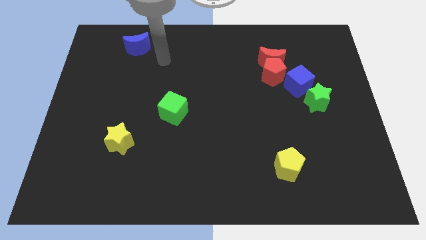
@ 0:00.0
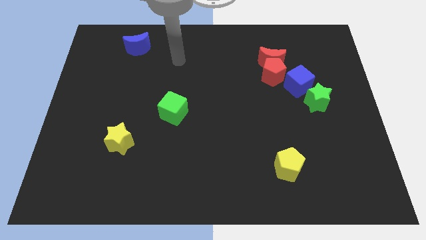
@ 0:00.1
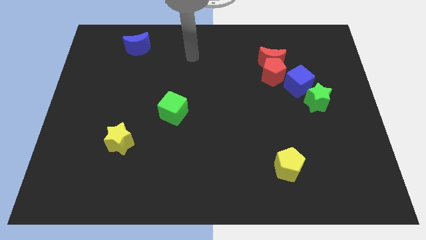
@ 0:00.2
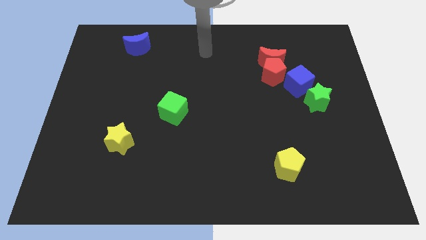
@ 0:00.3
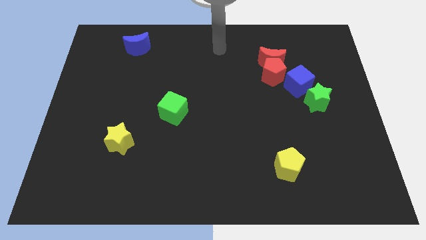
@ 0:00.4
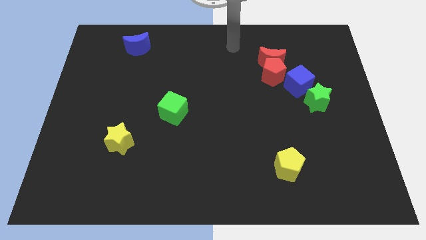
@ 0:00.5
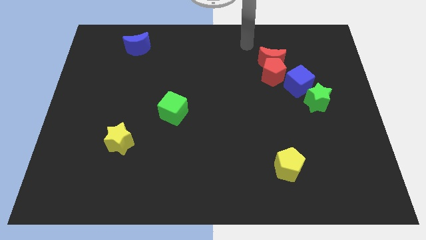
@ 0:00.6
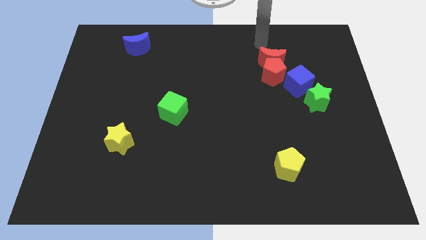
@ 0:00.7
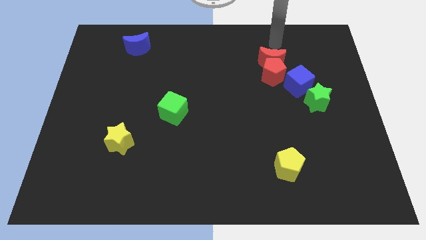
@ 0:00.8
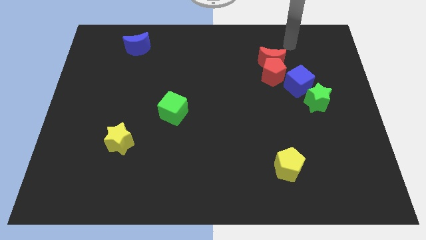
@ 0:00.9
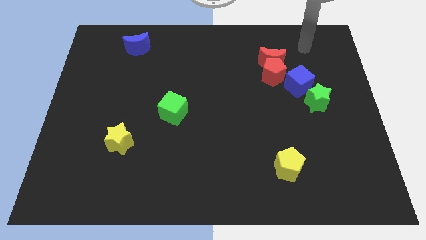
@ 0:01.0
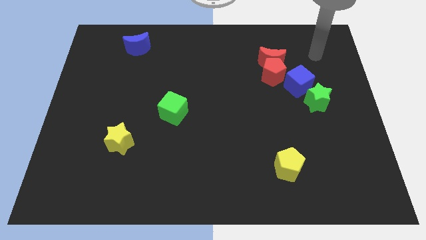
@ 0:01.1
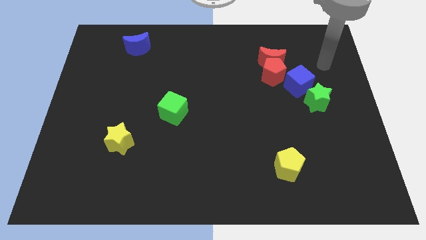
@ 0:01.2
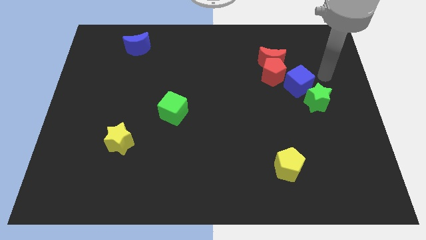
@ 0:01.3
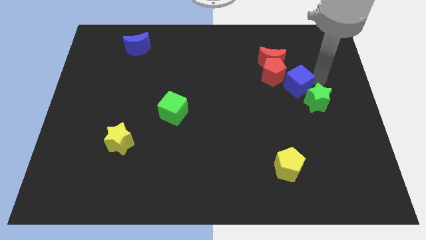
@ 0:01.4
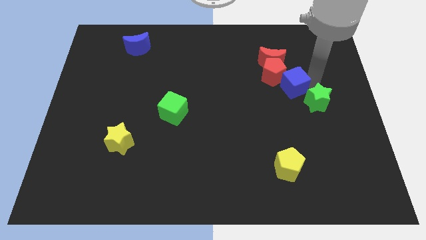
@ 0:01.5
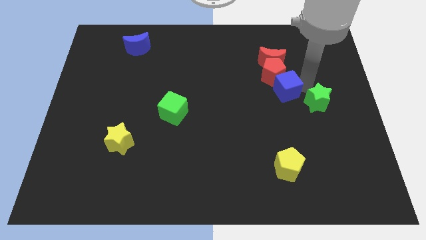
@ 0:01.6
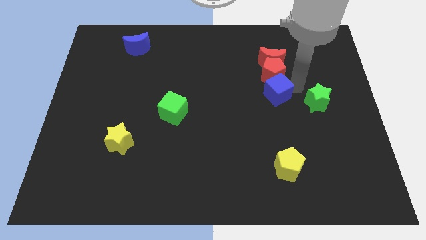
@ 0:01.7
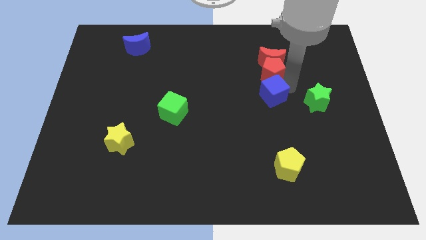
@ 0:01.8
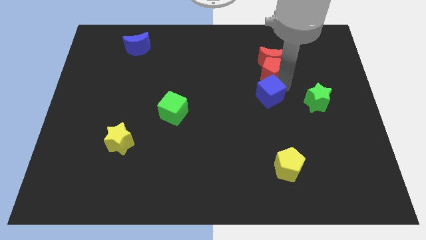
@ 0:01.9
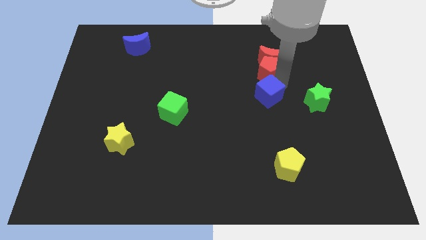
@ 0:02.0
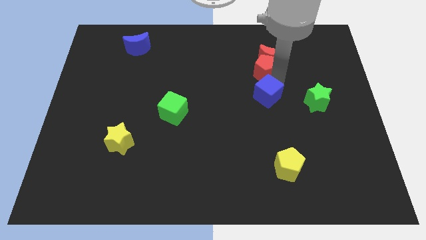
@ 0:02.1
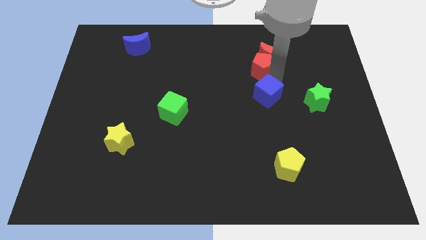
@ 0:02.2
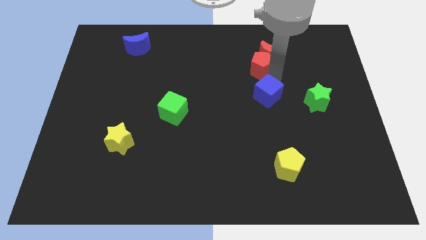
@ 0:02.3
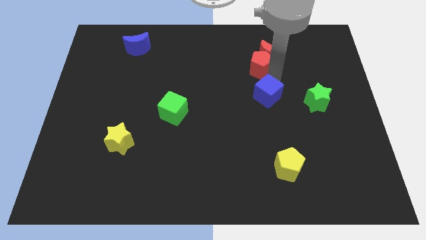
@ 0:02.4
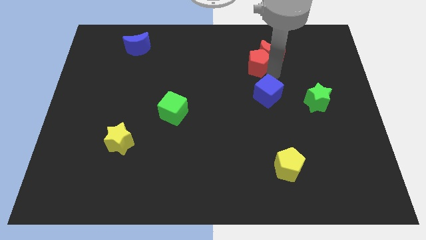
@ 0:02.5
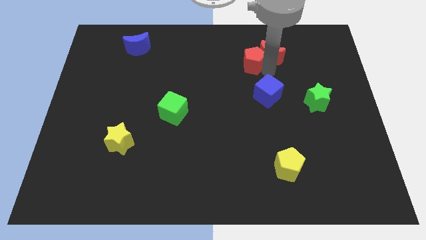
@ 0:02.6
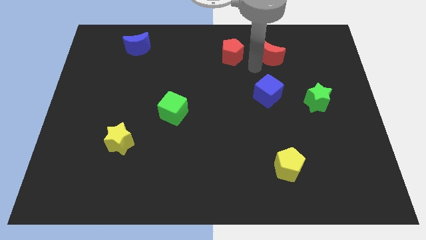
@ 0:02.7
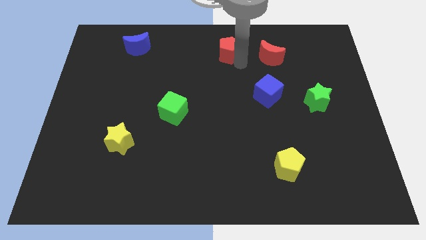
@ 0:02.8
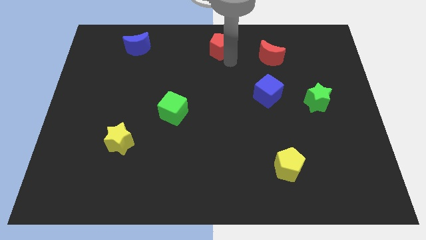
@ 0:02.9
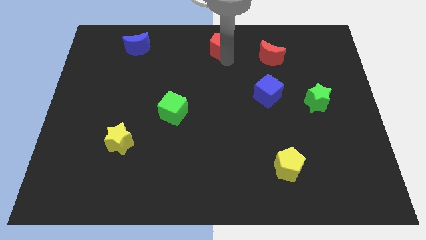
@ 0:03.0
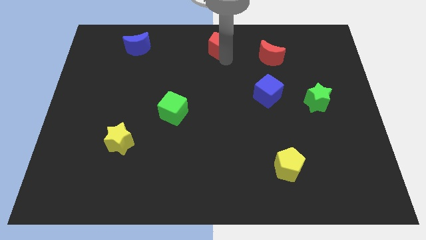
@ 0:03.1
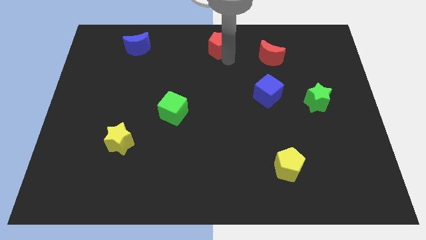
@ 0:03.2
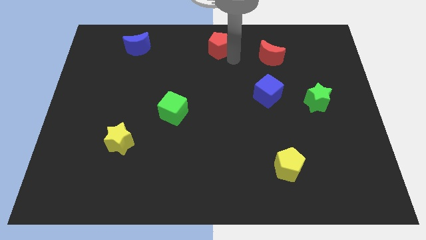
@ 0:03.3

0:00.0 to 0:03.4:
separate the blue cube from the green star

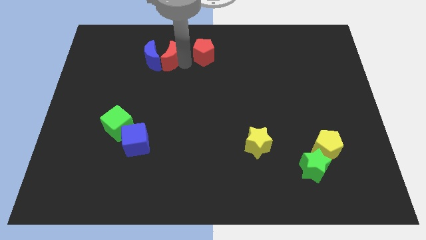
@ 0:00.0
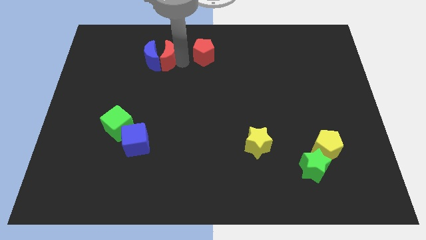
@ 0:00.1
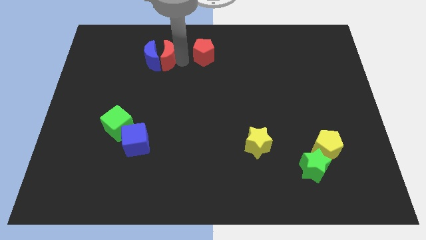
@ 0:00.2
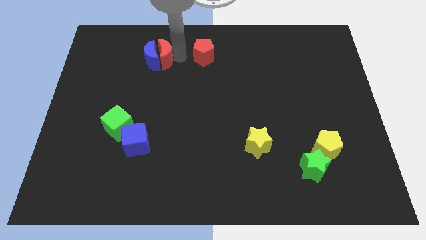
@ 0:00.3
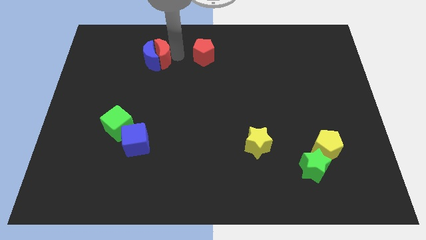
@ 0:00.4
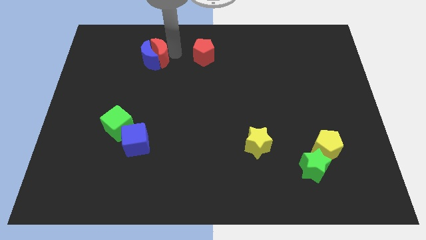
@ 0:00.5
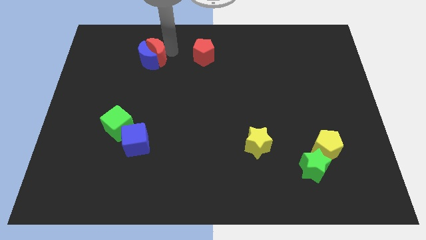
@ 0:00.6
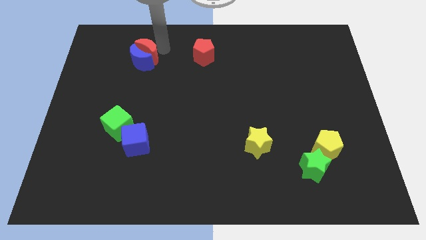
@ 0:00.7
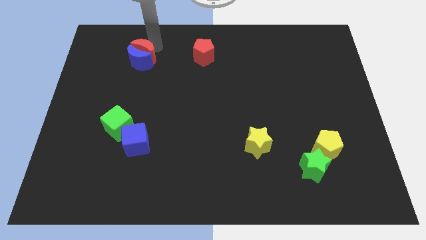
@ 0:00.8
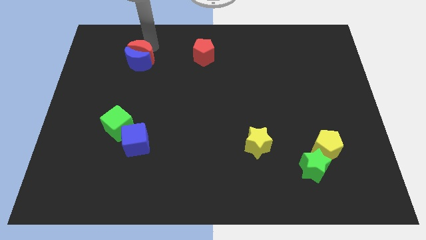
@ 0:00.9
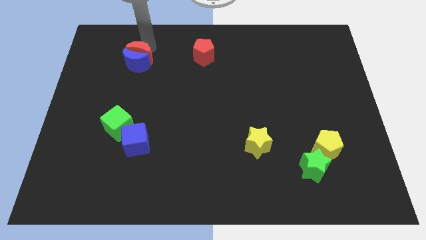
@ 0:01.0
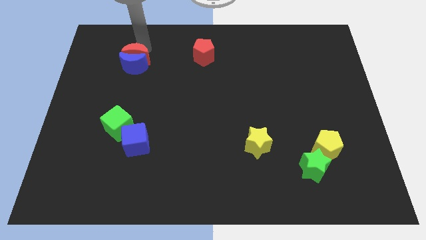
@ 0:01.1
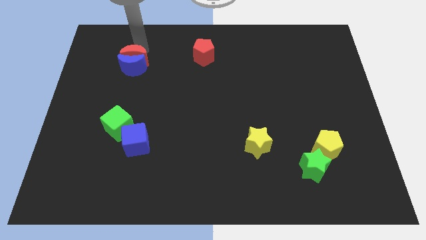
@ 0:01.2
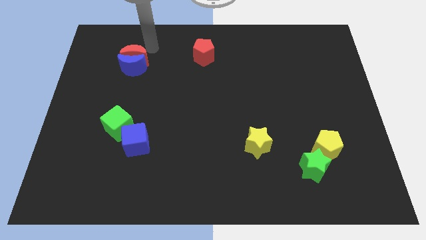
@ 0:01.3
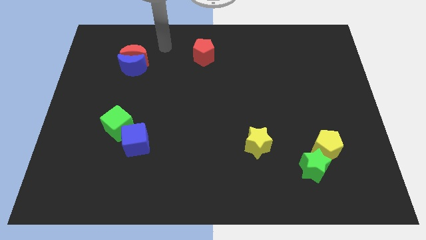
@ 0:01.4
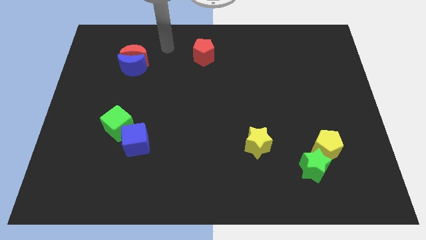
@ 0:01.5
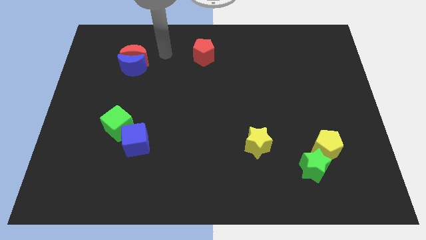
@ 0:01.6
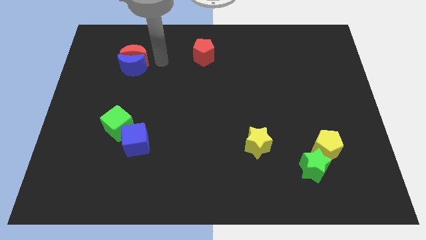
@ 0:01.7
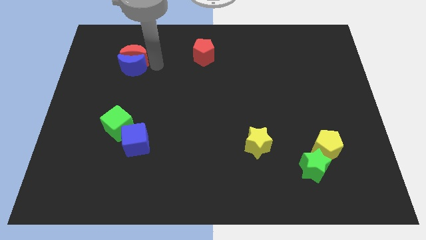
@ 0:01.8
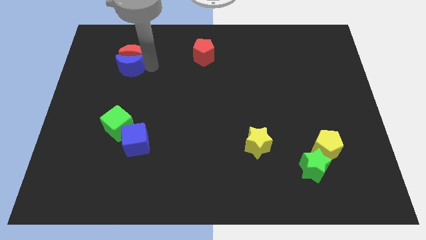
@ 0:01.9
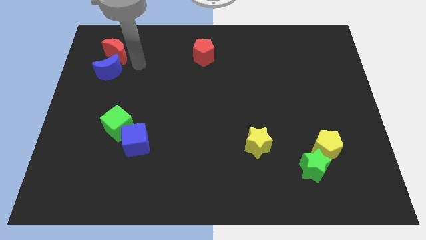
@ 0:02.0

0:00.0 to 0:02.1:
move blue and red moons towards top left

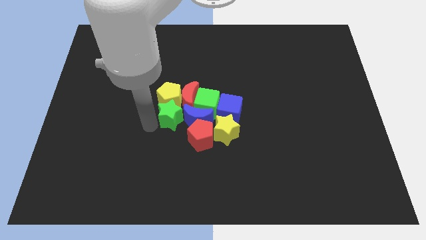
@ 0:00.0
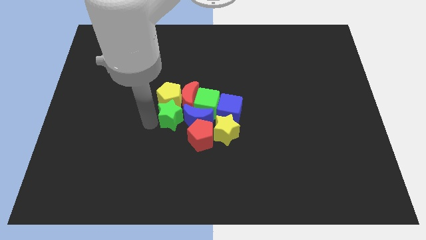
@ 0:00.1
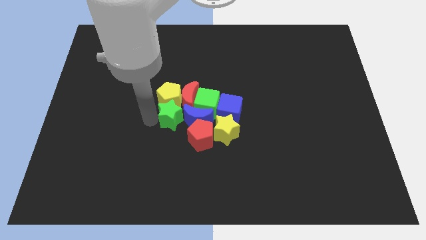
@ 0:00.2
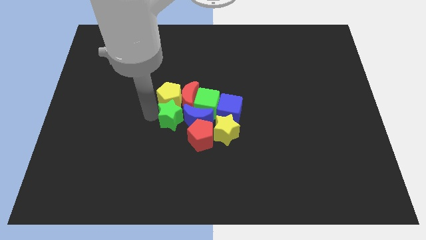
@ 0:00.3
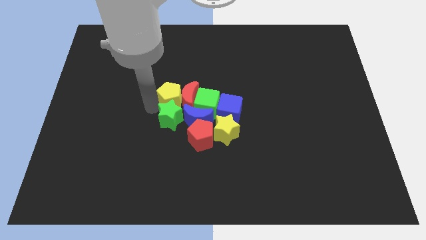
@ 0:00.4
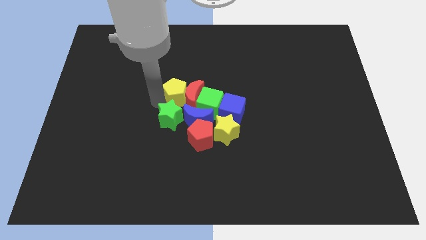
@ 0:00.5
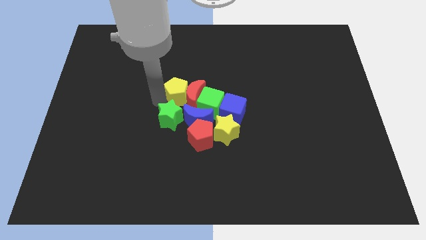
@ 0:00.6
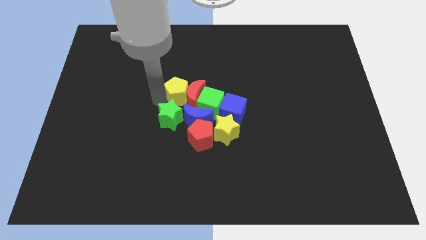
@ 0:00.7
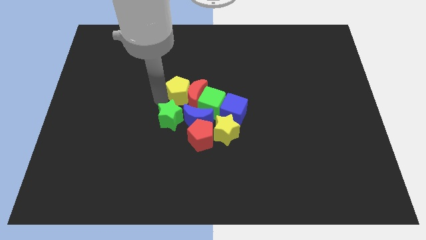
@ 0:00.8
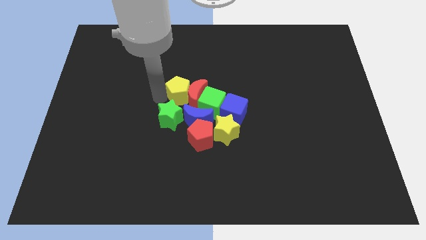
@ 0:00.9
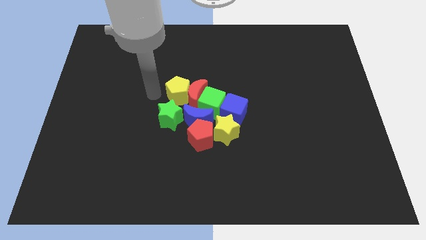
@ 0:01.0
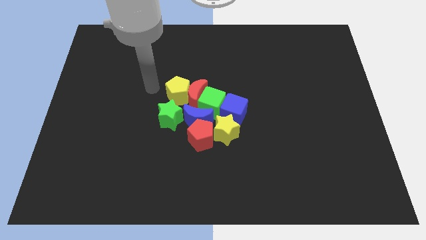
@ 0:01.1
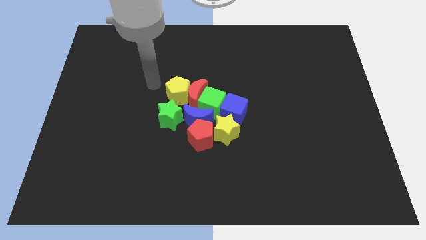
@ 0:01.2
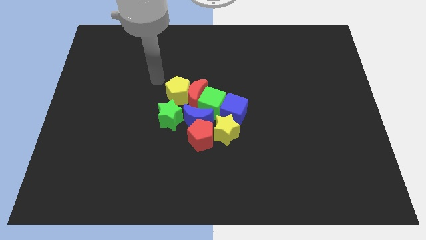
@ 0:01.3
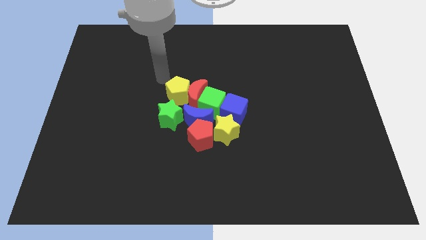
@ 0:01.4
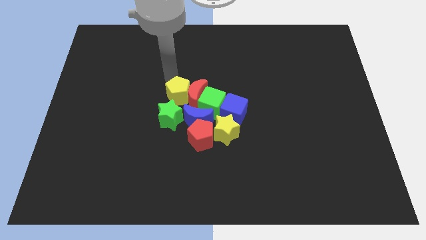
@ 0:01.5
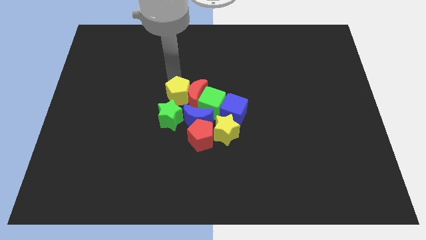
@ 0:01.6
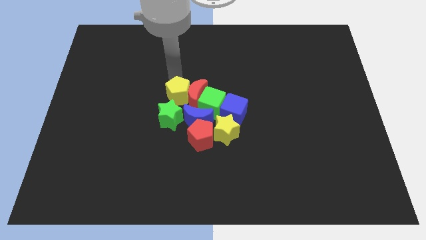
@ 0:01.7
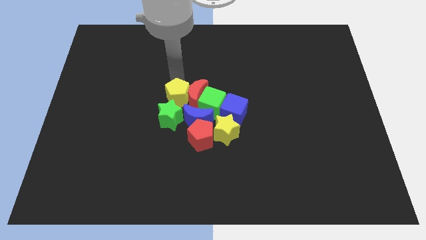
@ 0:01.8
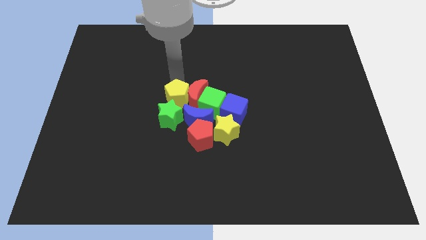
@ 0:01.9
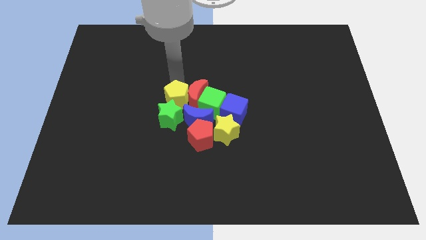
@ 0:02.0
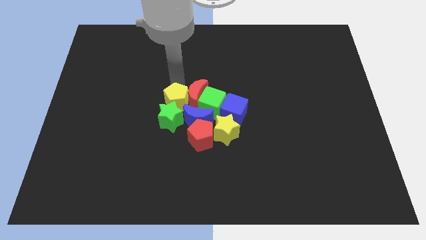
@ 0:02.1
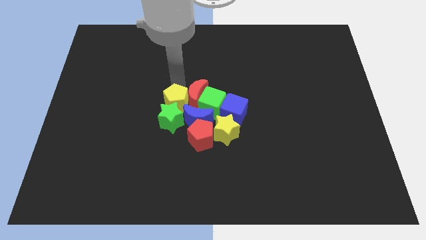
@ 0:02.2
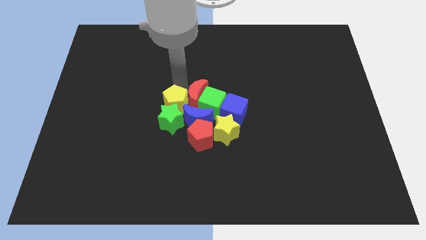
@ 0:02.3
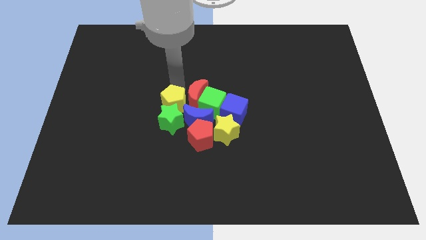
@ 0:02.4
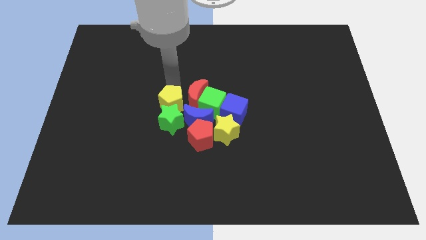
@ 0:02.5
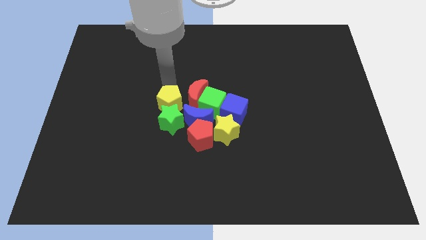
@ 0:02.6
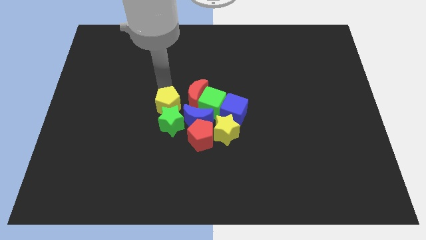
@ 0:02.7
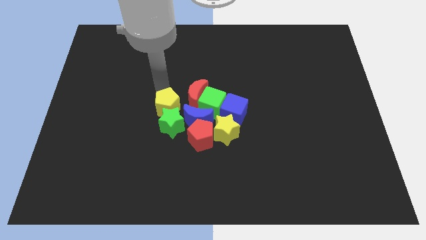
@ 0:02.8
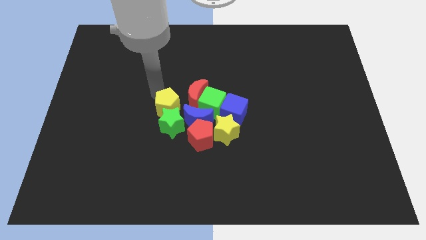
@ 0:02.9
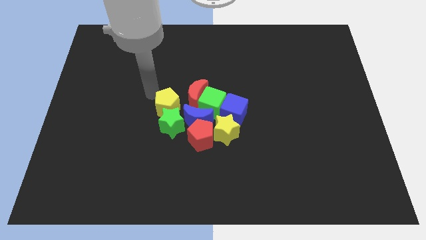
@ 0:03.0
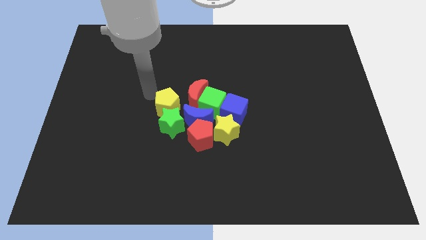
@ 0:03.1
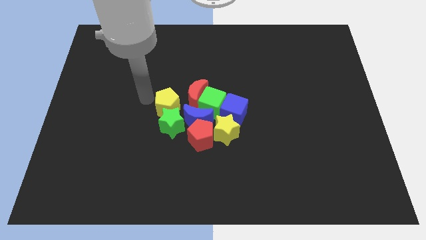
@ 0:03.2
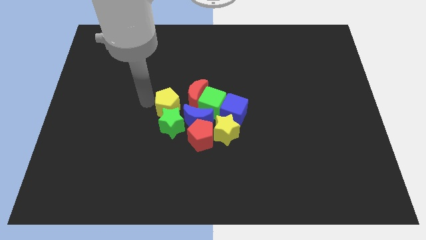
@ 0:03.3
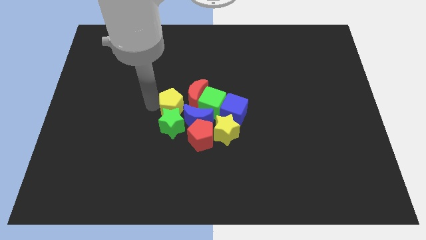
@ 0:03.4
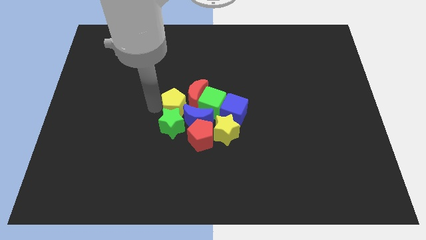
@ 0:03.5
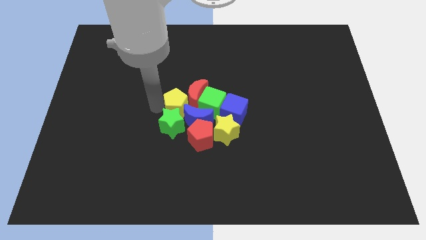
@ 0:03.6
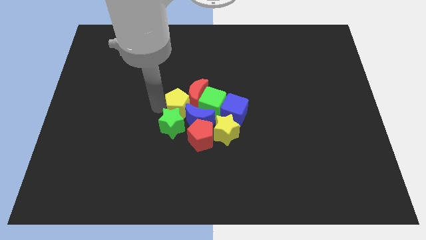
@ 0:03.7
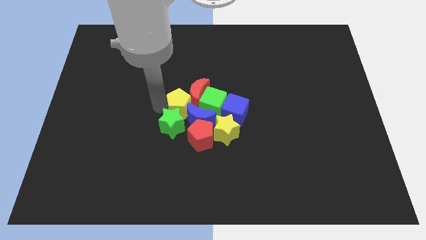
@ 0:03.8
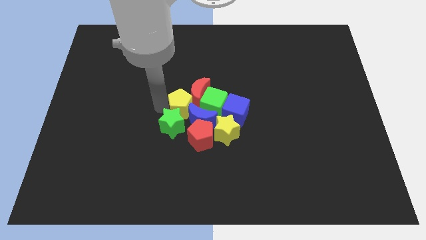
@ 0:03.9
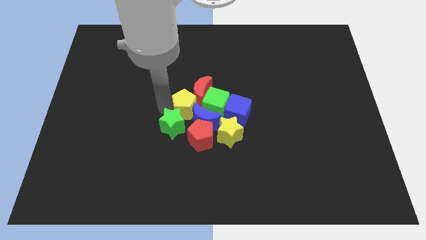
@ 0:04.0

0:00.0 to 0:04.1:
place yellow pentagon to the left of green cube
